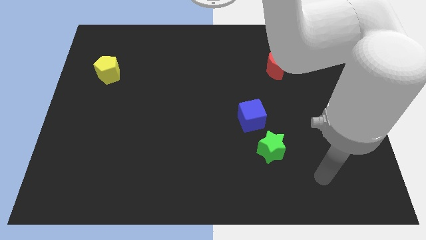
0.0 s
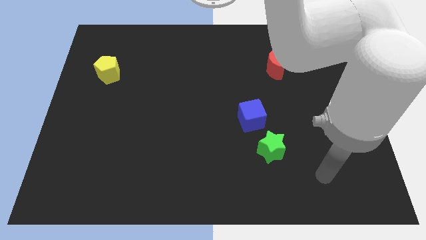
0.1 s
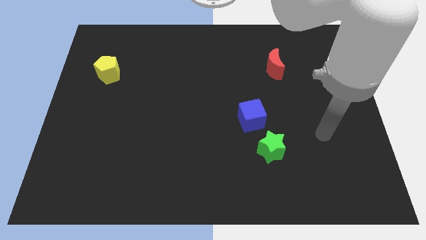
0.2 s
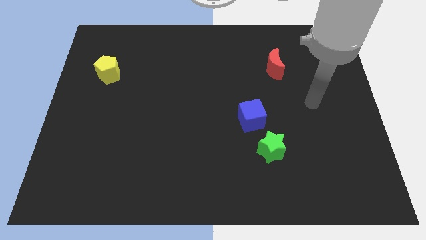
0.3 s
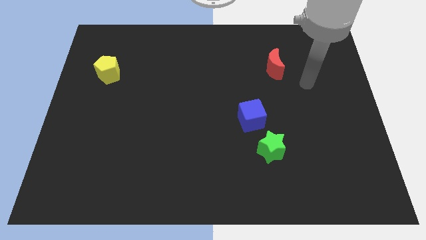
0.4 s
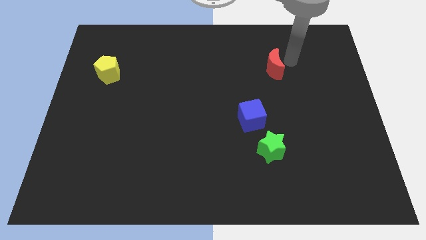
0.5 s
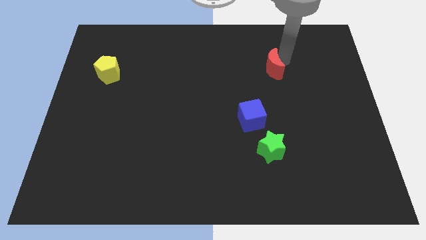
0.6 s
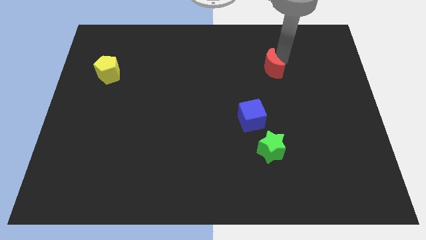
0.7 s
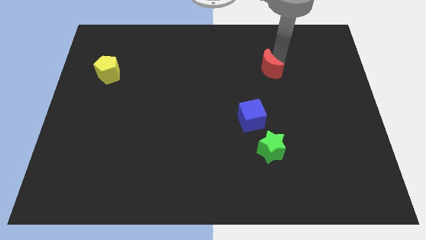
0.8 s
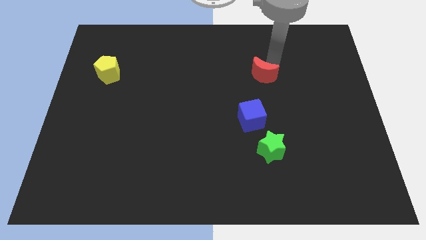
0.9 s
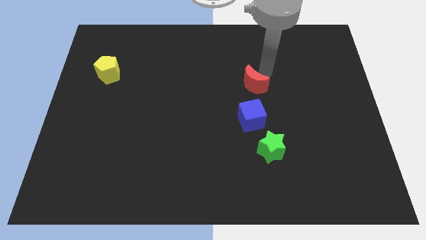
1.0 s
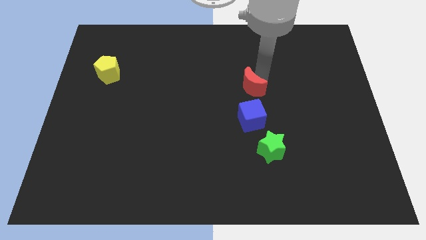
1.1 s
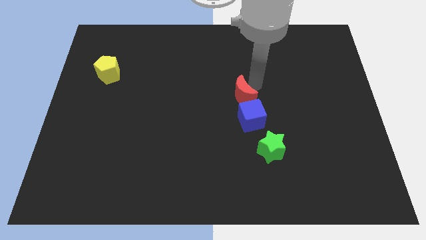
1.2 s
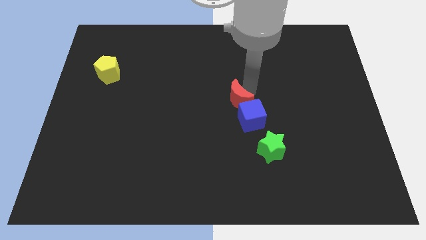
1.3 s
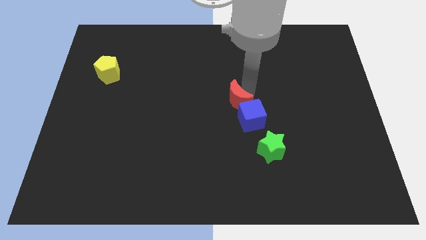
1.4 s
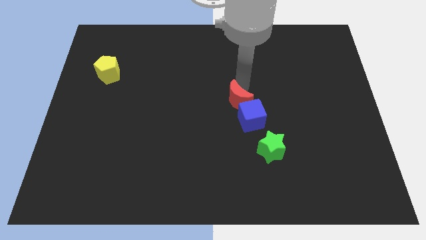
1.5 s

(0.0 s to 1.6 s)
move the moon next to the blue block

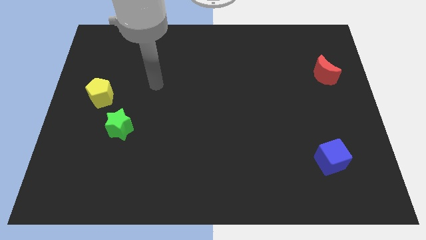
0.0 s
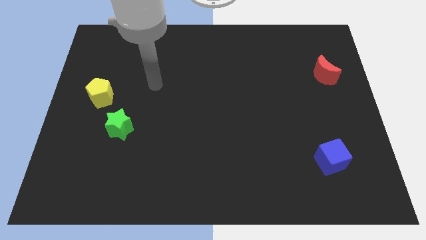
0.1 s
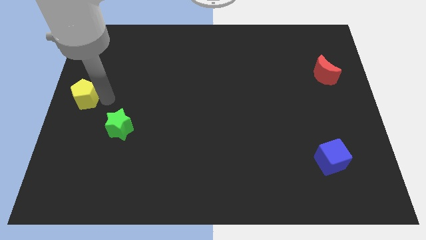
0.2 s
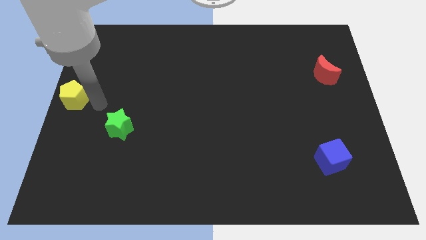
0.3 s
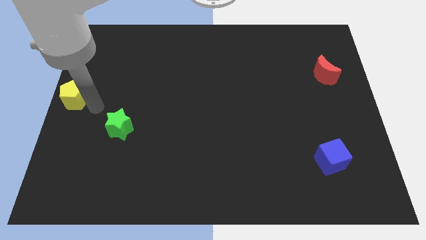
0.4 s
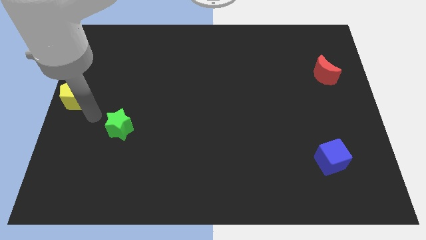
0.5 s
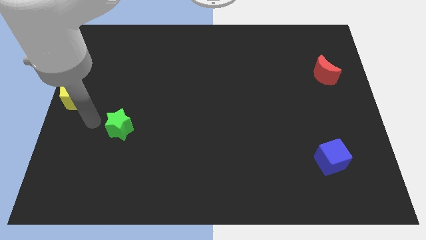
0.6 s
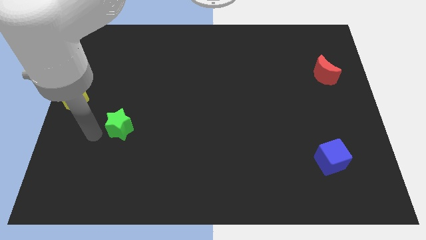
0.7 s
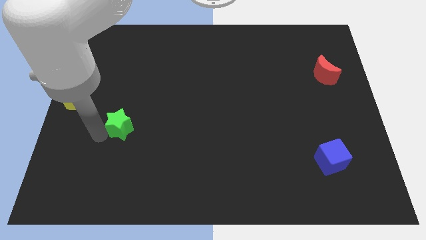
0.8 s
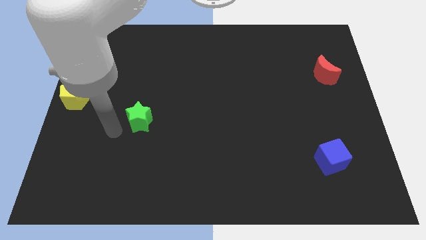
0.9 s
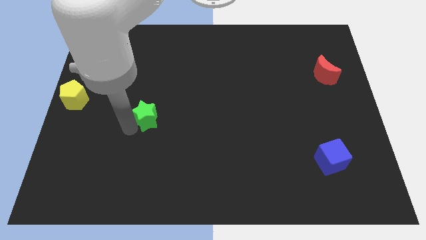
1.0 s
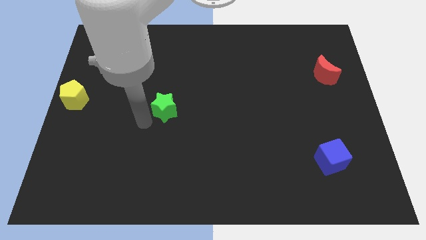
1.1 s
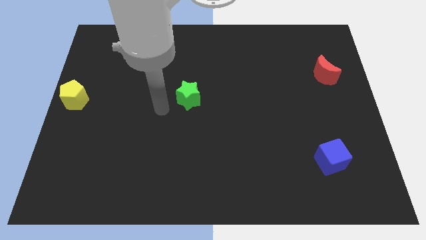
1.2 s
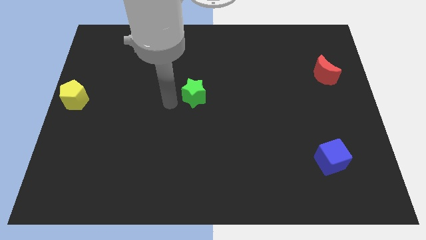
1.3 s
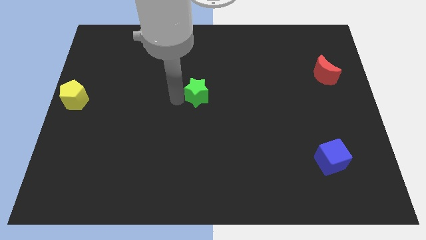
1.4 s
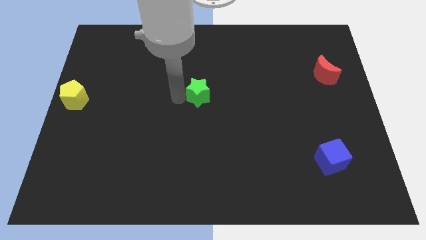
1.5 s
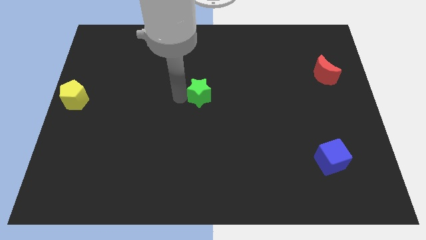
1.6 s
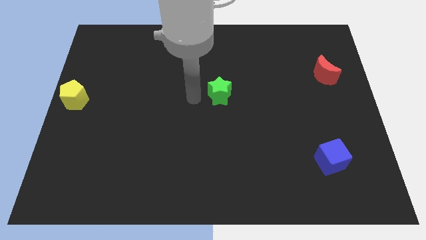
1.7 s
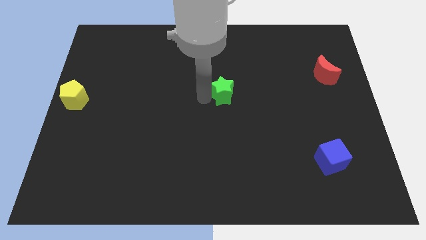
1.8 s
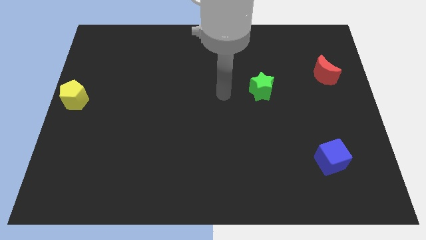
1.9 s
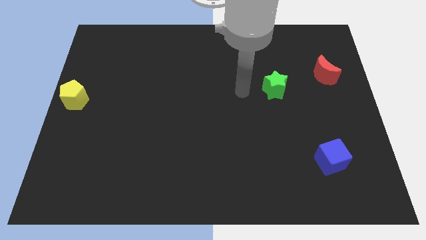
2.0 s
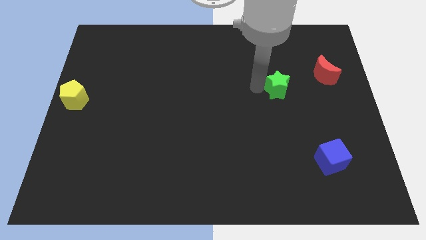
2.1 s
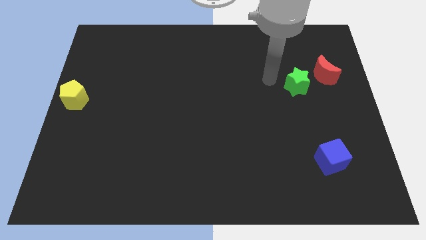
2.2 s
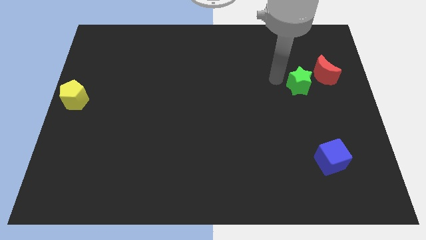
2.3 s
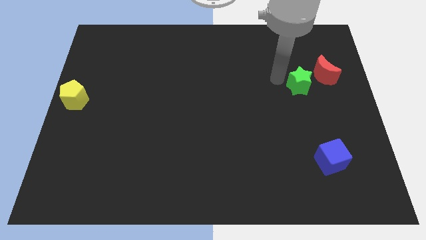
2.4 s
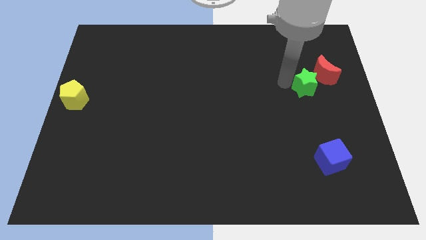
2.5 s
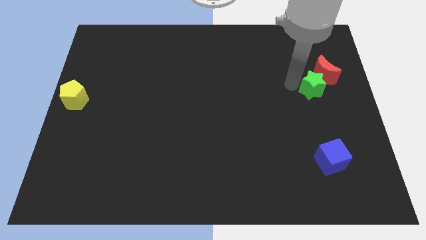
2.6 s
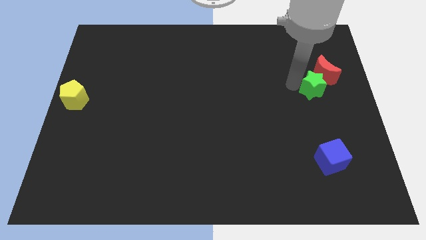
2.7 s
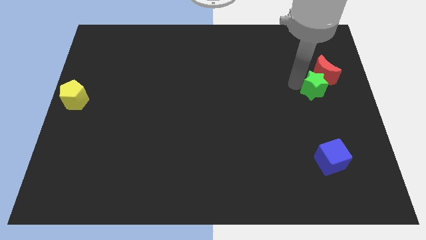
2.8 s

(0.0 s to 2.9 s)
slide the green star towards the red moon

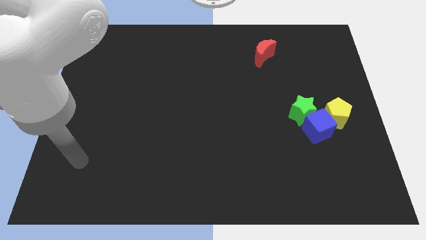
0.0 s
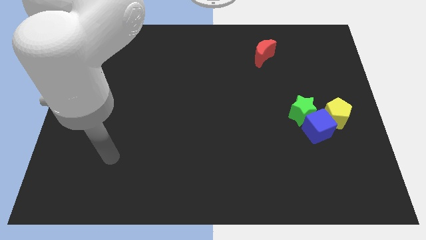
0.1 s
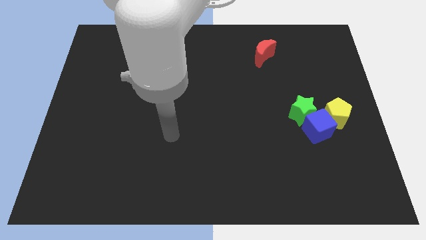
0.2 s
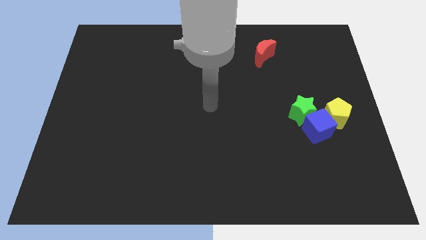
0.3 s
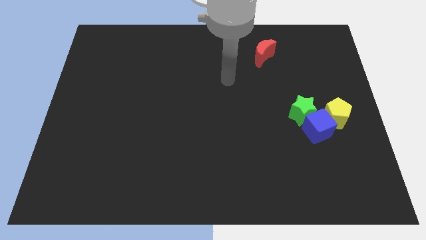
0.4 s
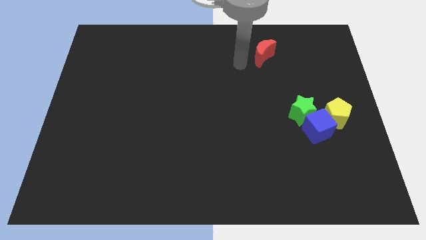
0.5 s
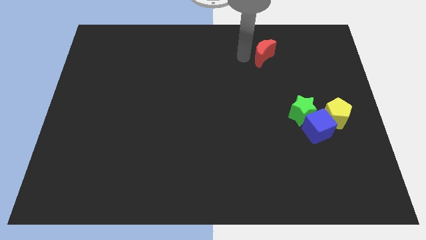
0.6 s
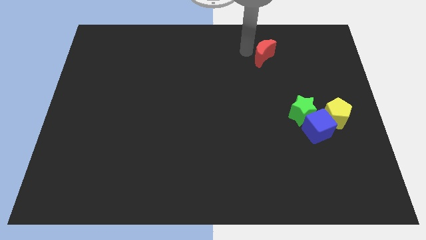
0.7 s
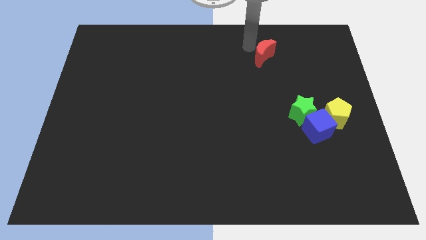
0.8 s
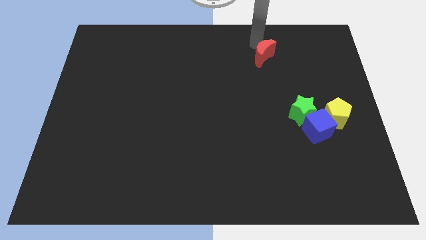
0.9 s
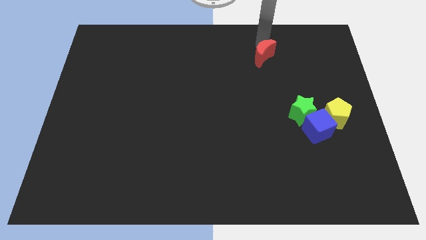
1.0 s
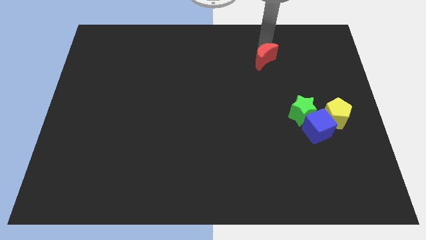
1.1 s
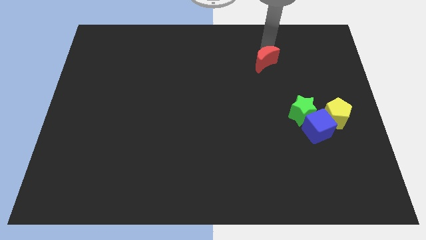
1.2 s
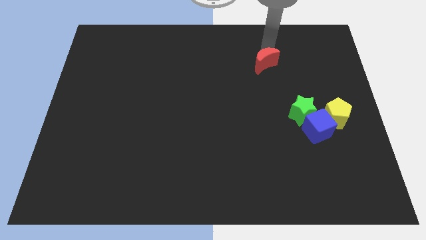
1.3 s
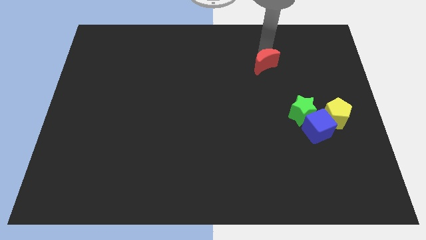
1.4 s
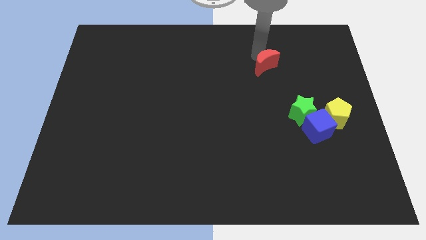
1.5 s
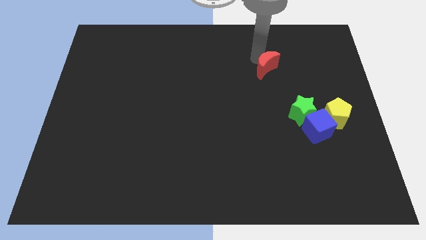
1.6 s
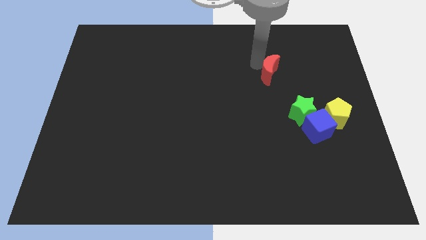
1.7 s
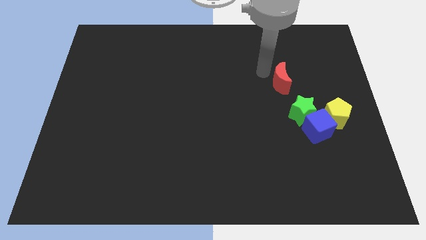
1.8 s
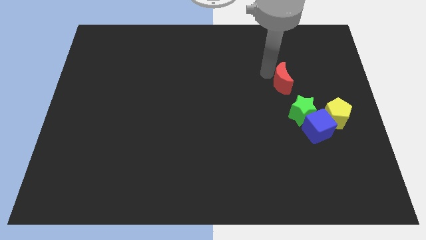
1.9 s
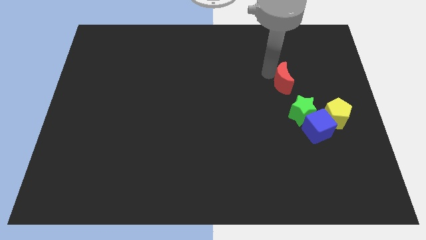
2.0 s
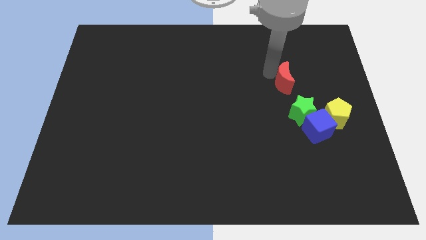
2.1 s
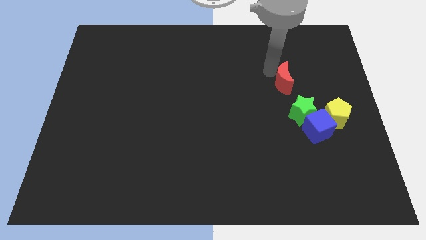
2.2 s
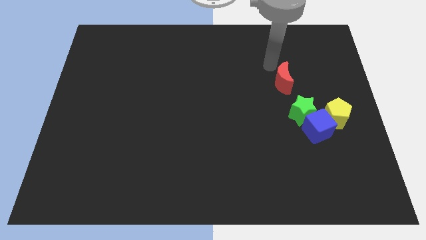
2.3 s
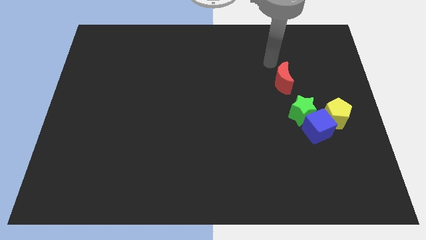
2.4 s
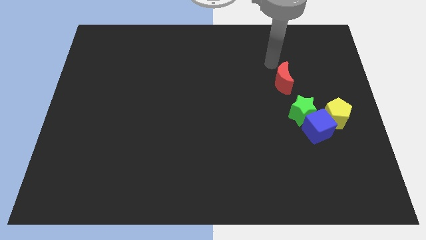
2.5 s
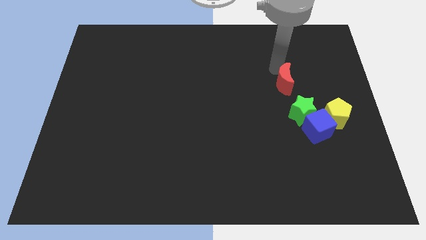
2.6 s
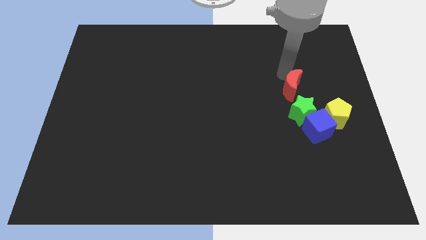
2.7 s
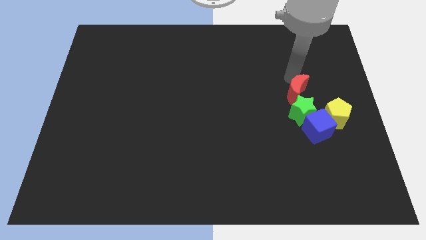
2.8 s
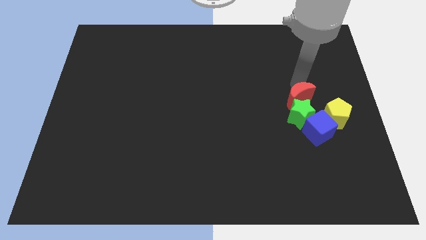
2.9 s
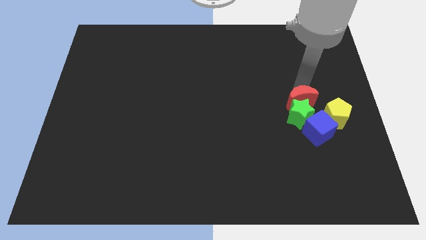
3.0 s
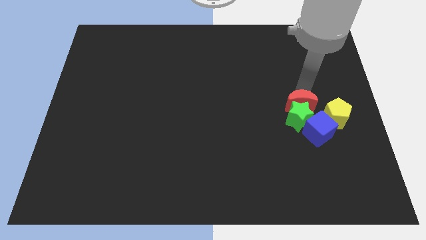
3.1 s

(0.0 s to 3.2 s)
slide the red moon close to the green star

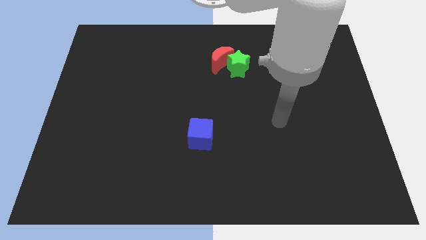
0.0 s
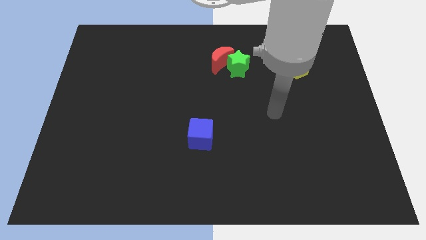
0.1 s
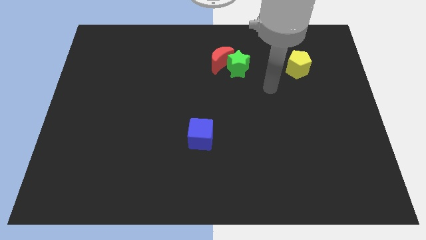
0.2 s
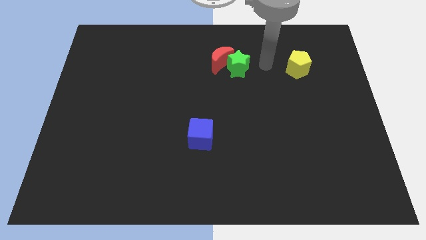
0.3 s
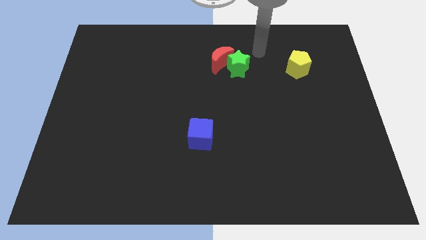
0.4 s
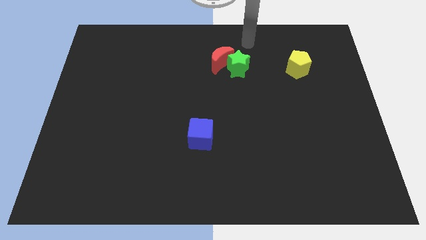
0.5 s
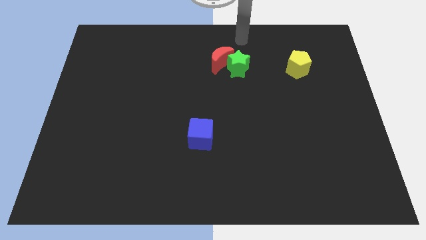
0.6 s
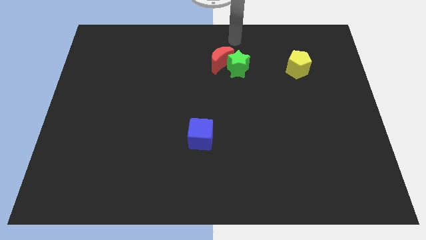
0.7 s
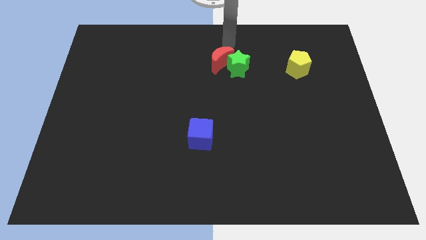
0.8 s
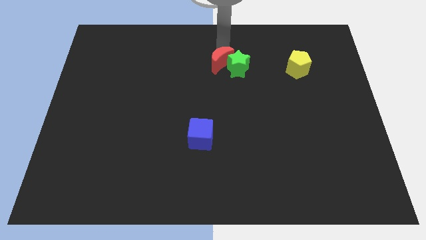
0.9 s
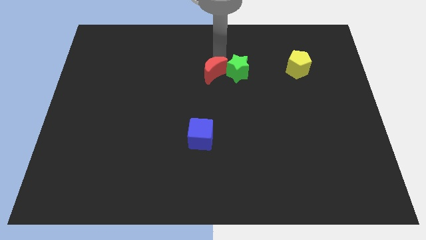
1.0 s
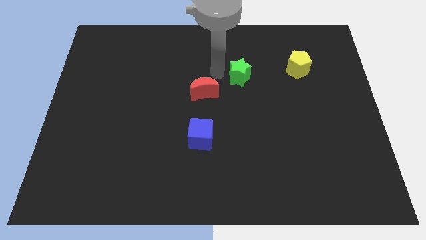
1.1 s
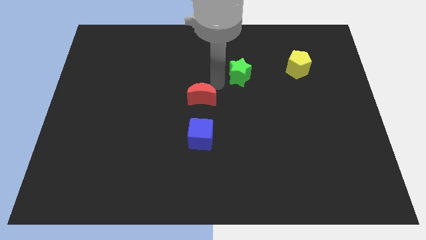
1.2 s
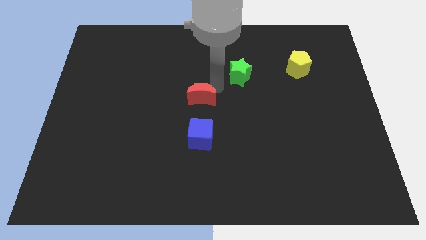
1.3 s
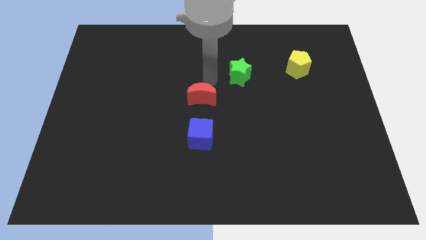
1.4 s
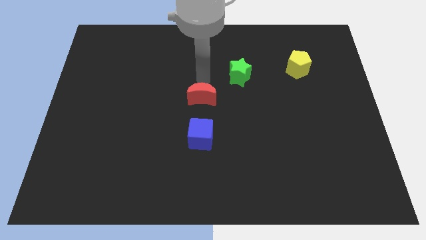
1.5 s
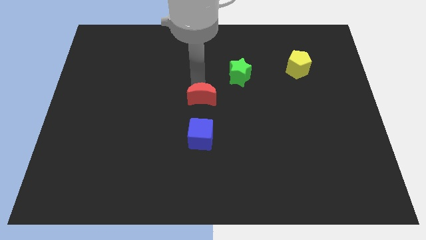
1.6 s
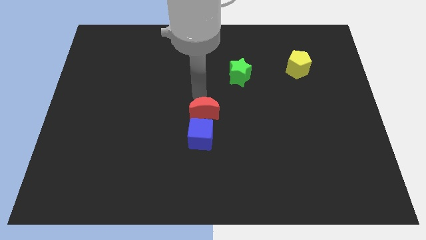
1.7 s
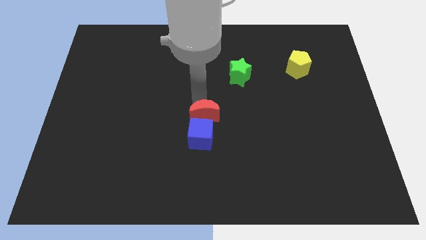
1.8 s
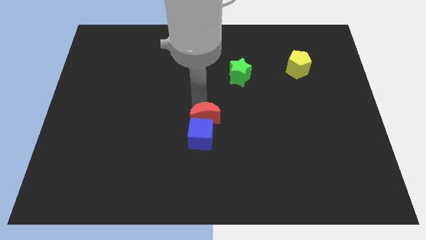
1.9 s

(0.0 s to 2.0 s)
push the red moon next to the blue block
